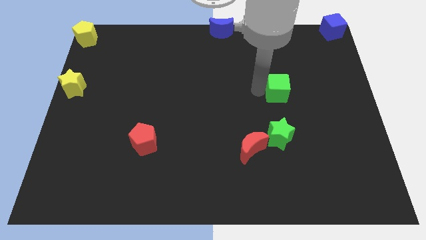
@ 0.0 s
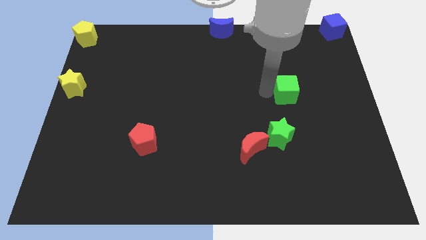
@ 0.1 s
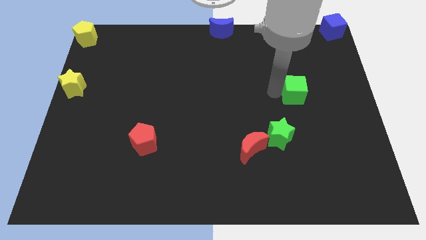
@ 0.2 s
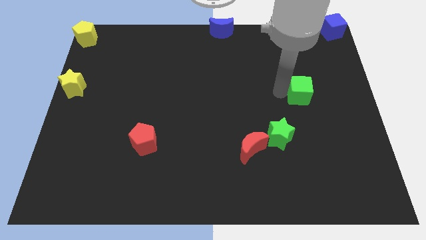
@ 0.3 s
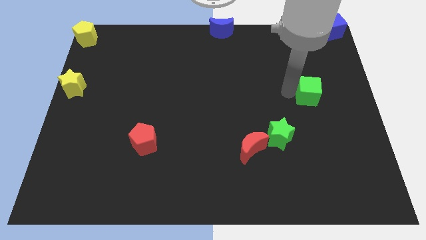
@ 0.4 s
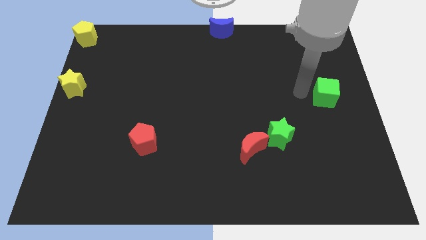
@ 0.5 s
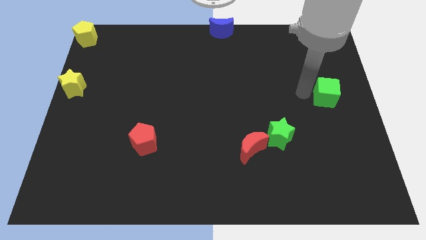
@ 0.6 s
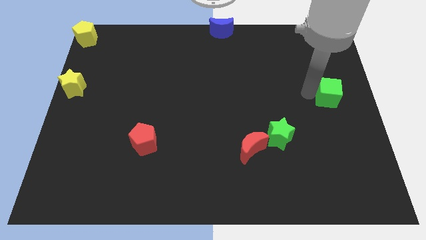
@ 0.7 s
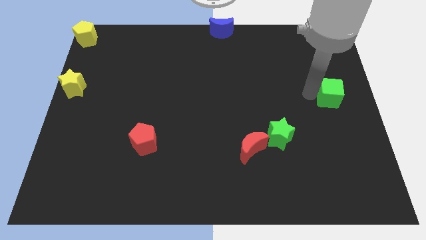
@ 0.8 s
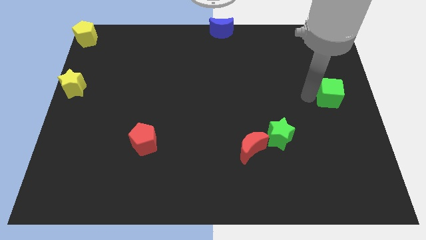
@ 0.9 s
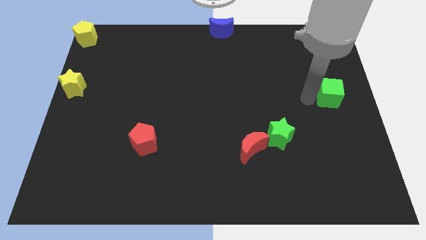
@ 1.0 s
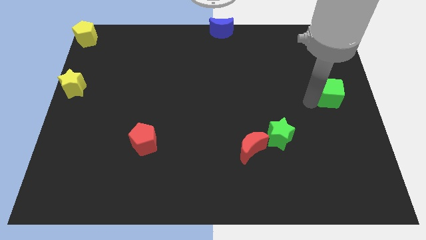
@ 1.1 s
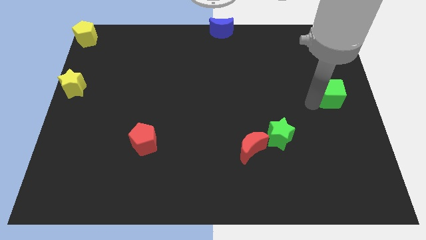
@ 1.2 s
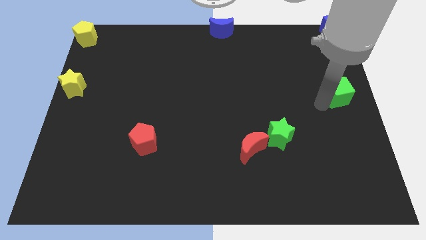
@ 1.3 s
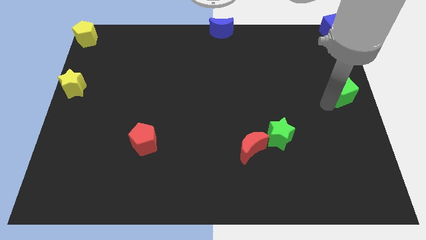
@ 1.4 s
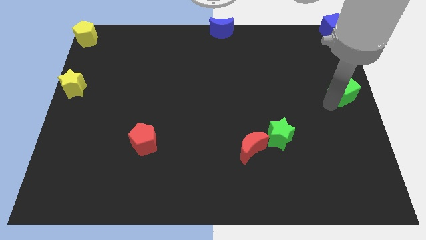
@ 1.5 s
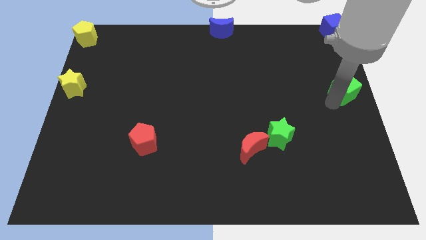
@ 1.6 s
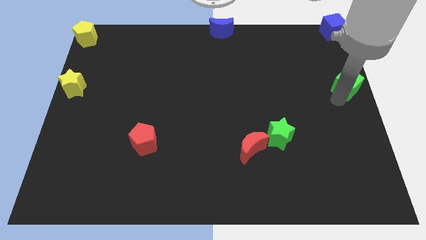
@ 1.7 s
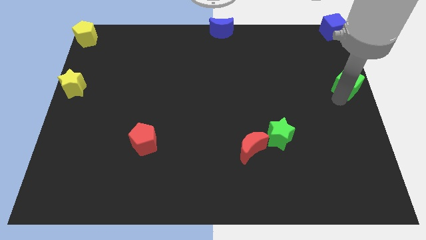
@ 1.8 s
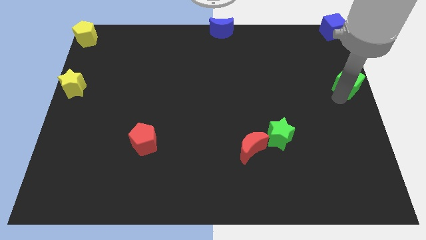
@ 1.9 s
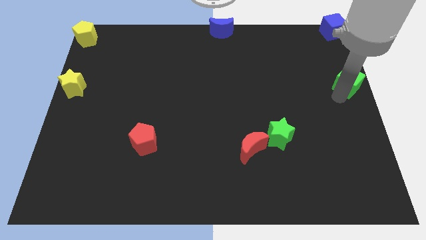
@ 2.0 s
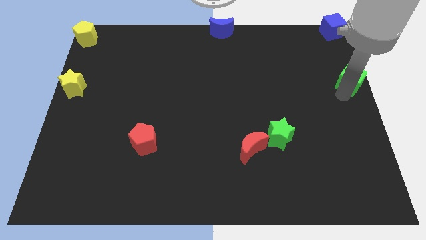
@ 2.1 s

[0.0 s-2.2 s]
place the green cube vertically below the blue cube

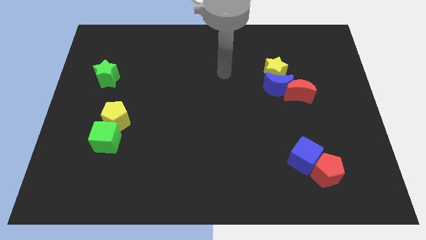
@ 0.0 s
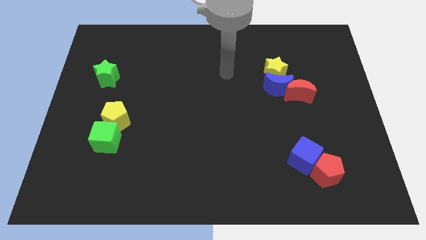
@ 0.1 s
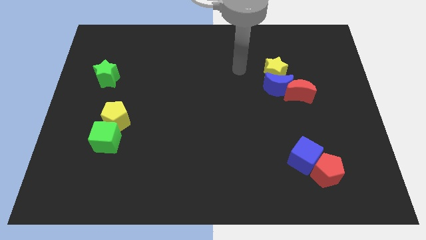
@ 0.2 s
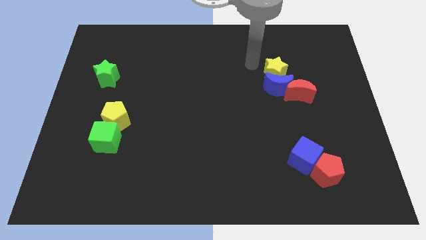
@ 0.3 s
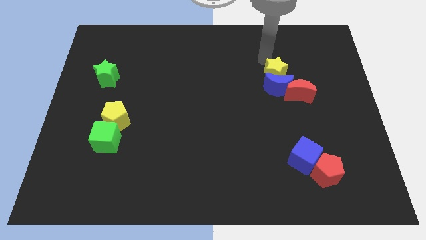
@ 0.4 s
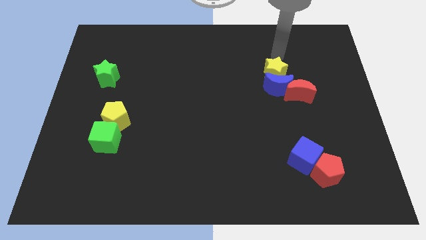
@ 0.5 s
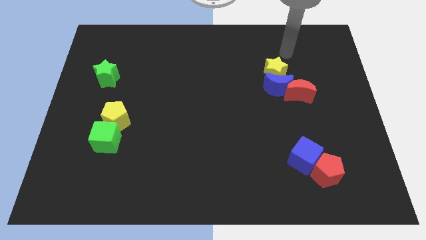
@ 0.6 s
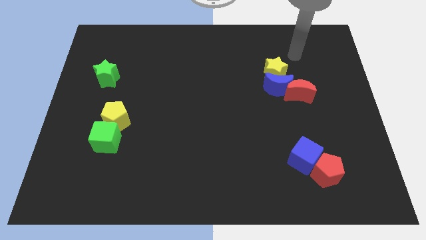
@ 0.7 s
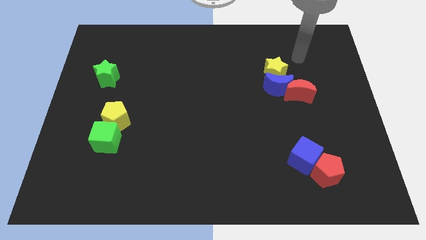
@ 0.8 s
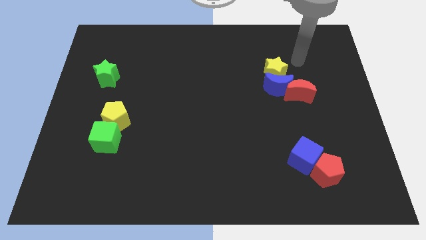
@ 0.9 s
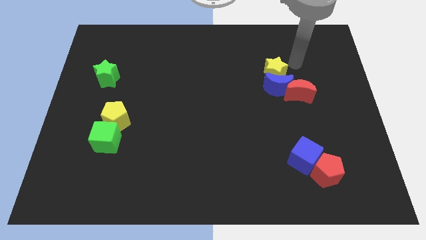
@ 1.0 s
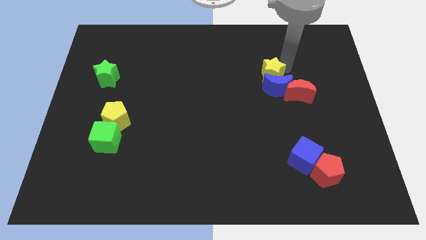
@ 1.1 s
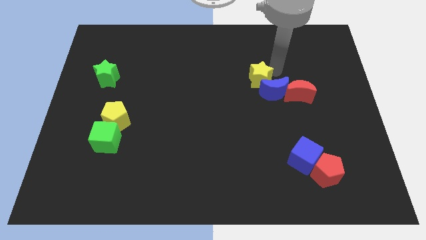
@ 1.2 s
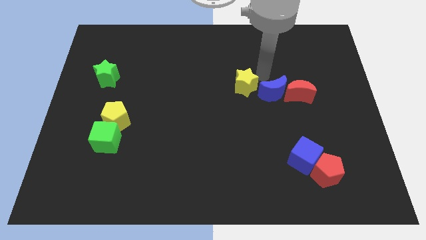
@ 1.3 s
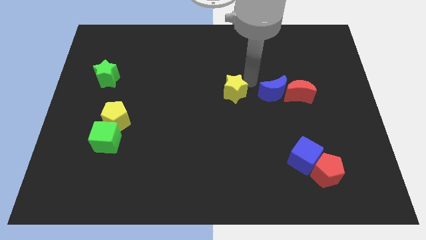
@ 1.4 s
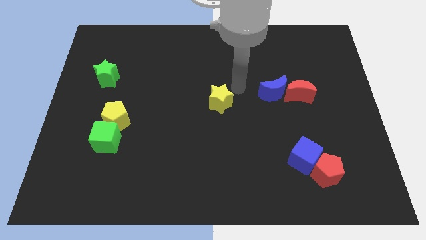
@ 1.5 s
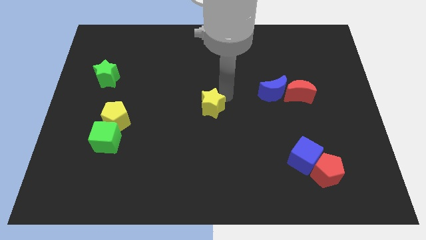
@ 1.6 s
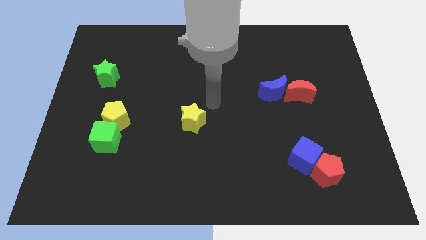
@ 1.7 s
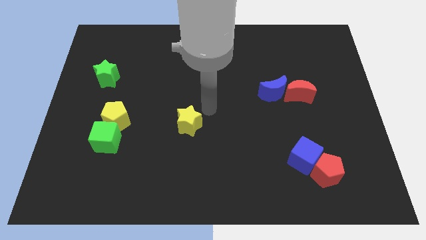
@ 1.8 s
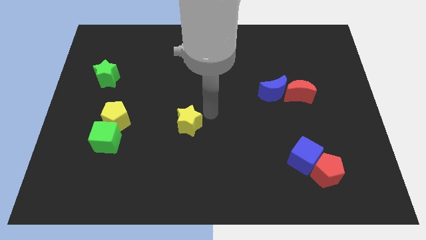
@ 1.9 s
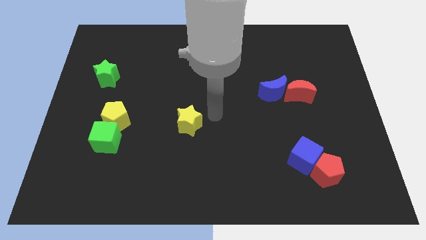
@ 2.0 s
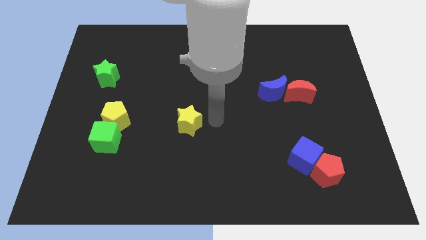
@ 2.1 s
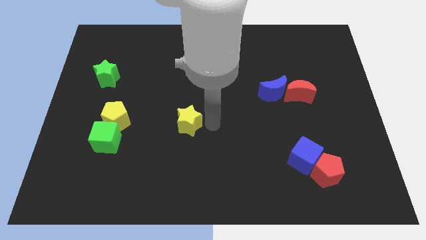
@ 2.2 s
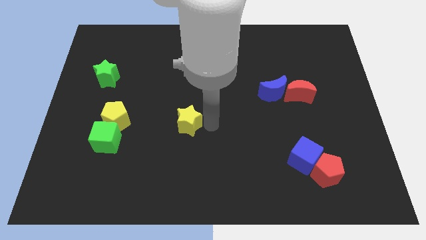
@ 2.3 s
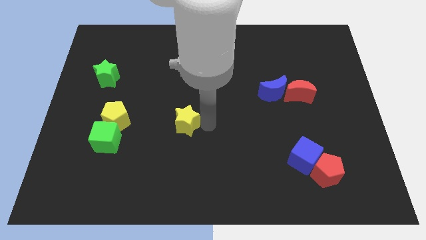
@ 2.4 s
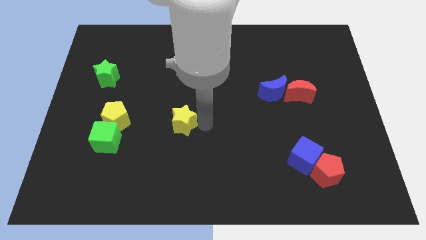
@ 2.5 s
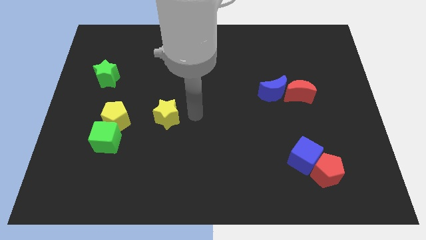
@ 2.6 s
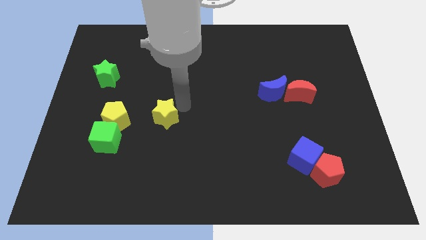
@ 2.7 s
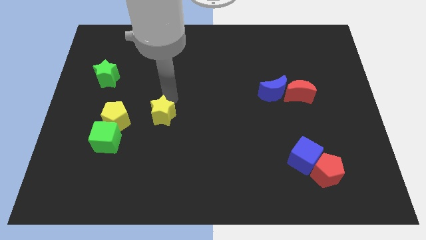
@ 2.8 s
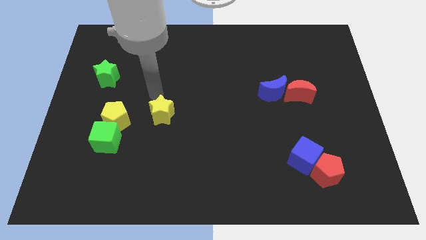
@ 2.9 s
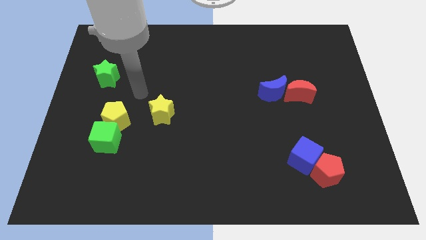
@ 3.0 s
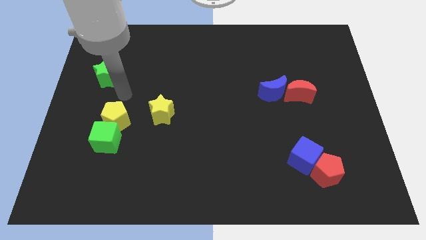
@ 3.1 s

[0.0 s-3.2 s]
move the yellow star on the right side of the yellow pentagon

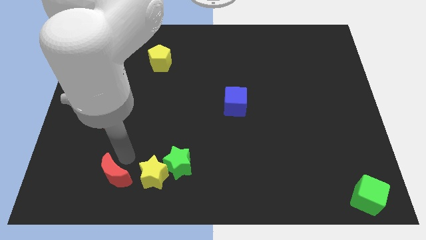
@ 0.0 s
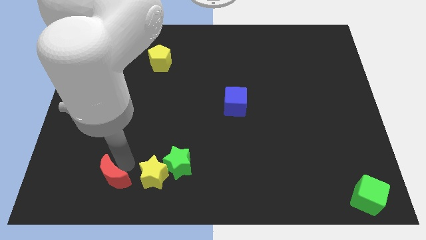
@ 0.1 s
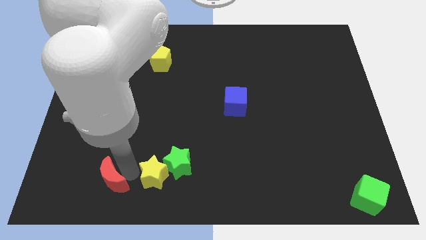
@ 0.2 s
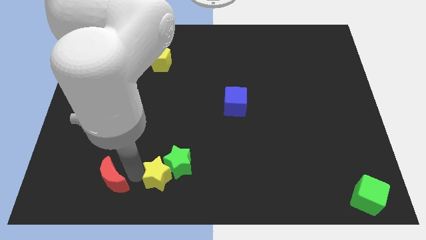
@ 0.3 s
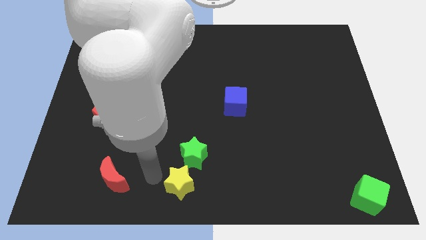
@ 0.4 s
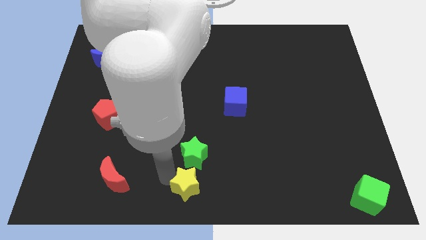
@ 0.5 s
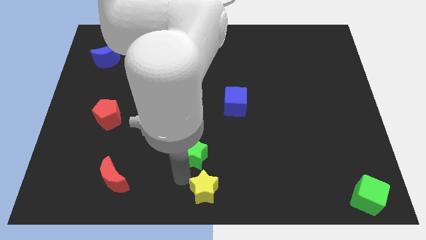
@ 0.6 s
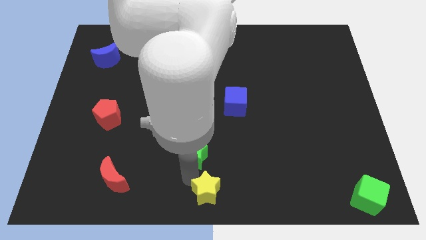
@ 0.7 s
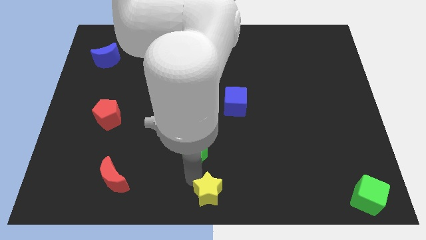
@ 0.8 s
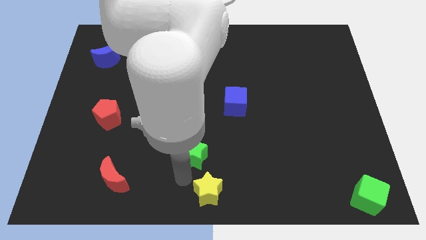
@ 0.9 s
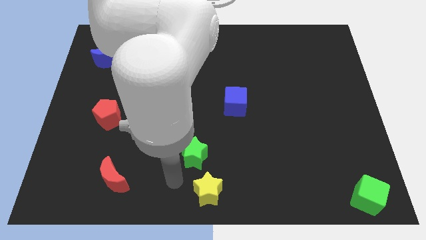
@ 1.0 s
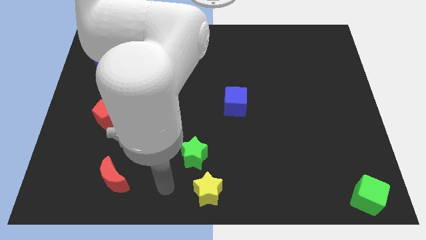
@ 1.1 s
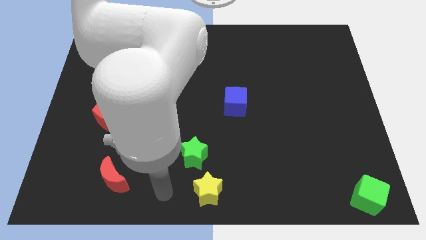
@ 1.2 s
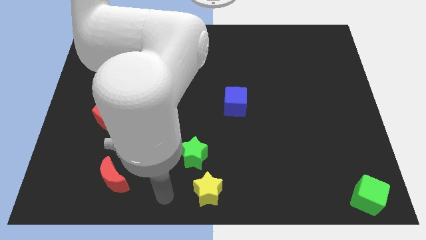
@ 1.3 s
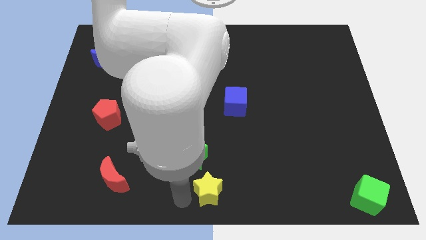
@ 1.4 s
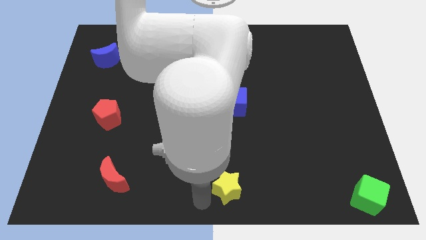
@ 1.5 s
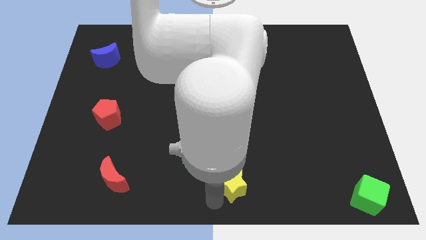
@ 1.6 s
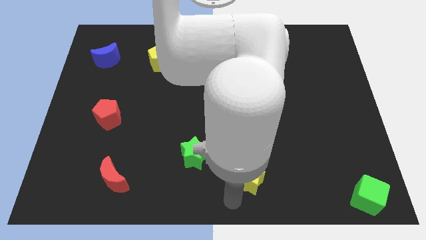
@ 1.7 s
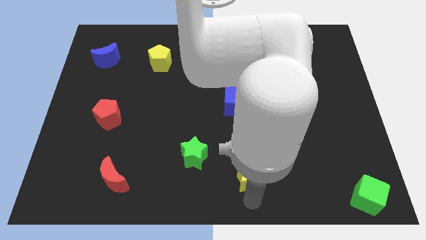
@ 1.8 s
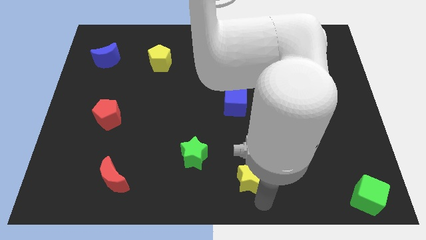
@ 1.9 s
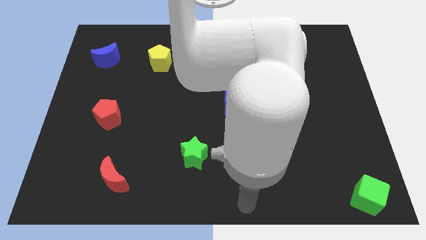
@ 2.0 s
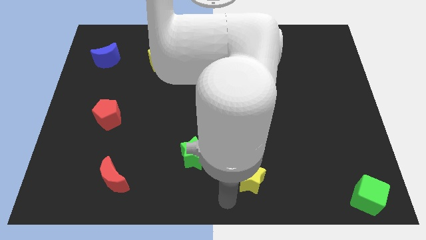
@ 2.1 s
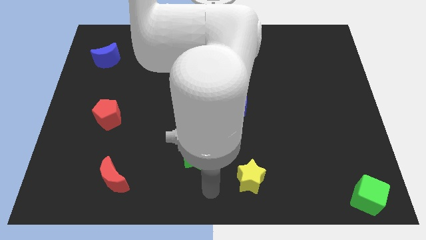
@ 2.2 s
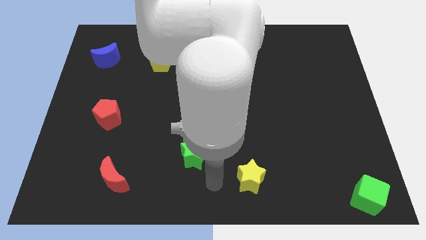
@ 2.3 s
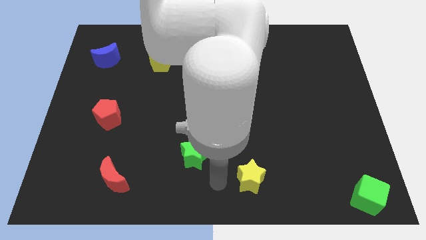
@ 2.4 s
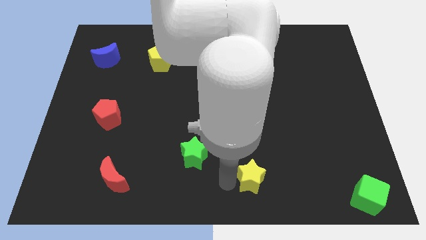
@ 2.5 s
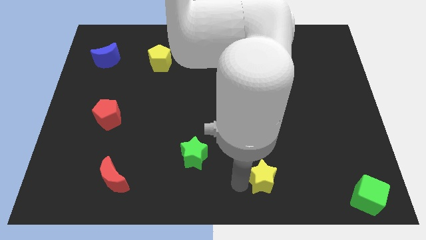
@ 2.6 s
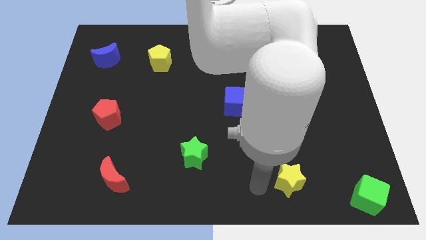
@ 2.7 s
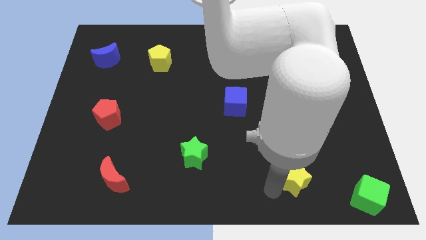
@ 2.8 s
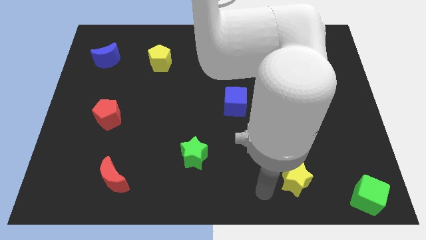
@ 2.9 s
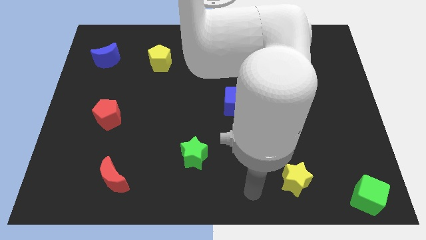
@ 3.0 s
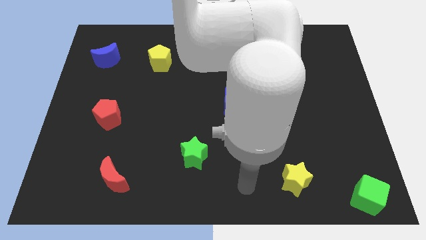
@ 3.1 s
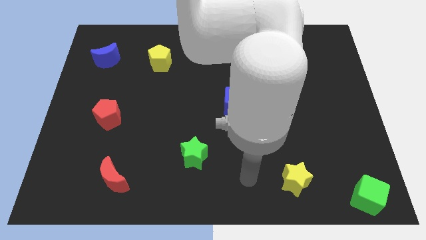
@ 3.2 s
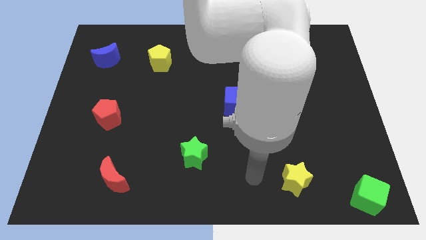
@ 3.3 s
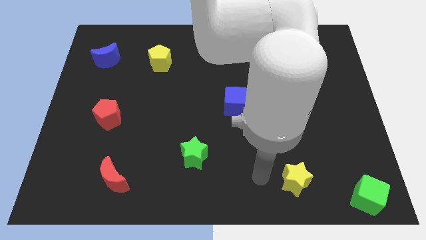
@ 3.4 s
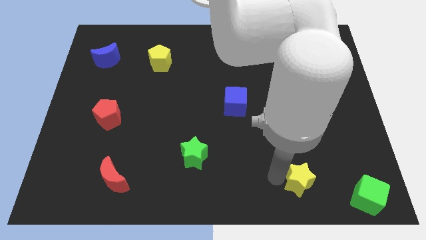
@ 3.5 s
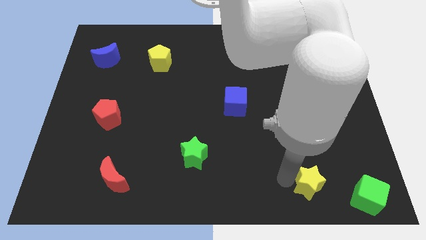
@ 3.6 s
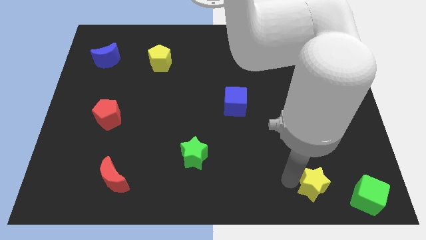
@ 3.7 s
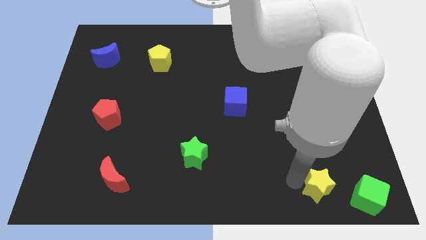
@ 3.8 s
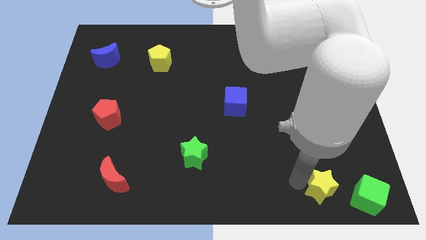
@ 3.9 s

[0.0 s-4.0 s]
move the yellow star to the left of the green cube
